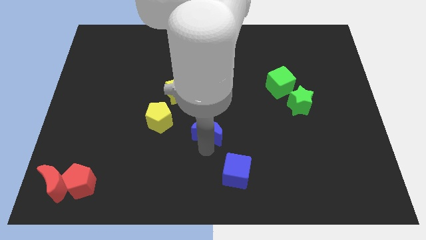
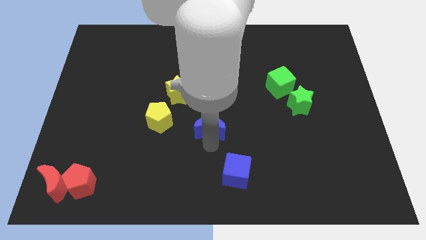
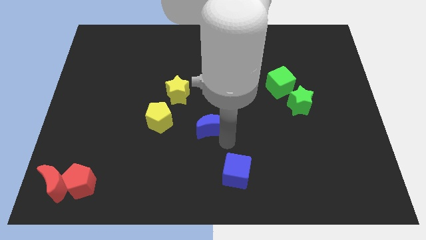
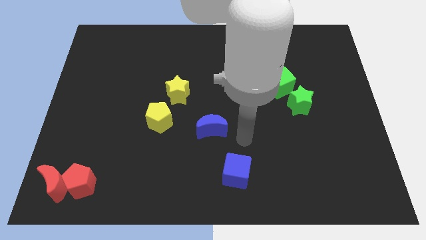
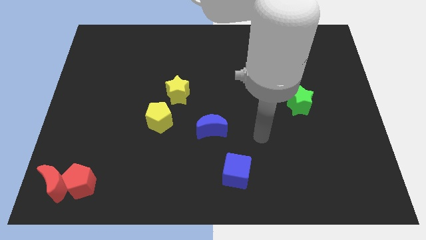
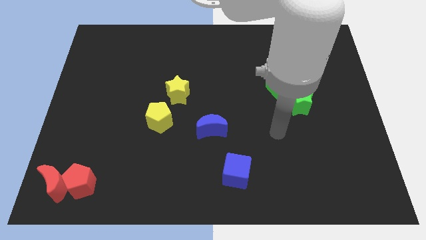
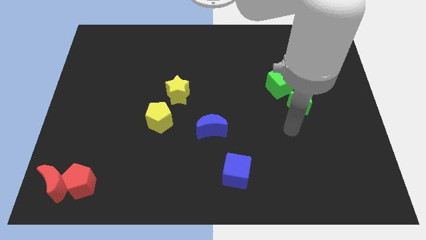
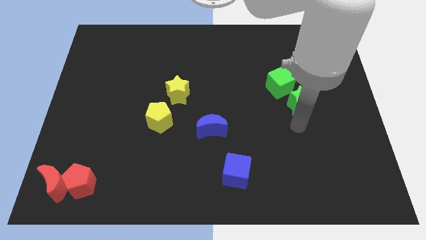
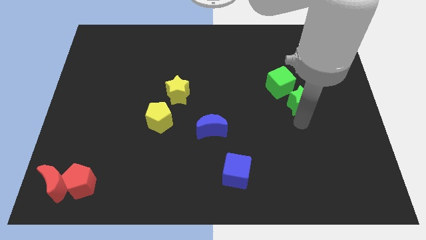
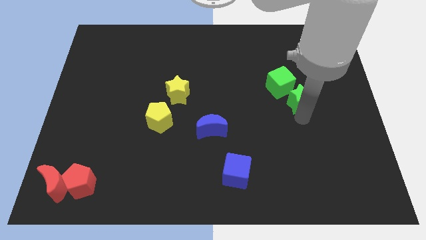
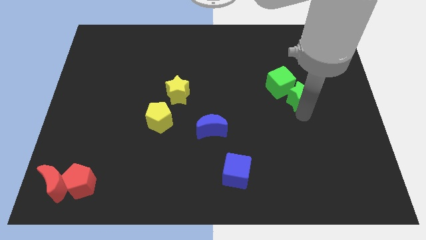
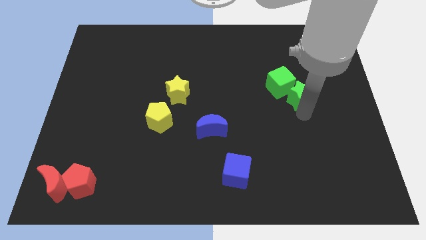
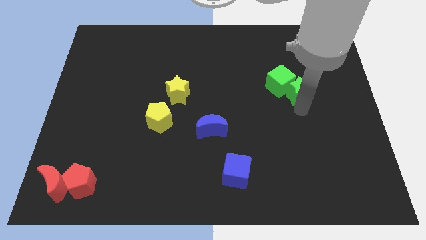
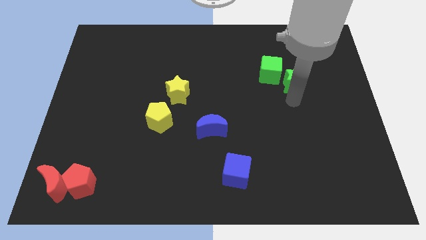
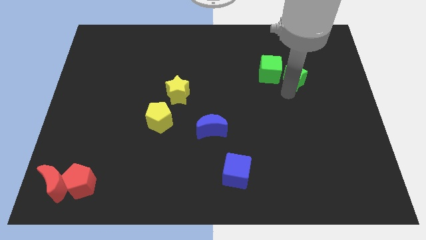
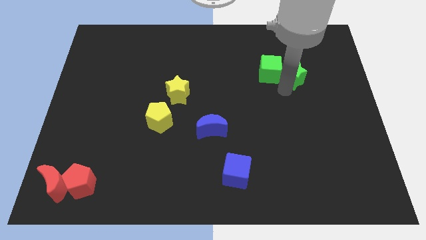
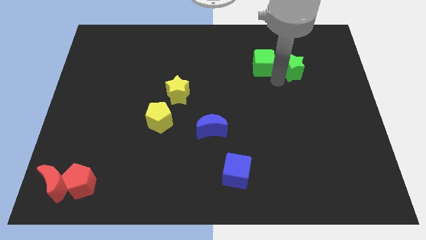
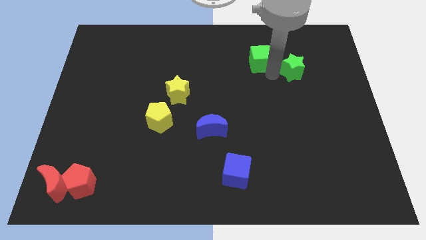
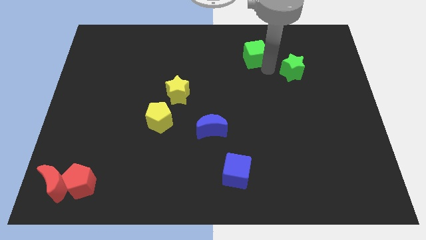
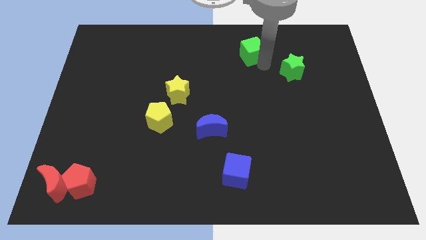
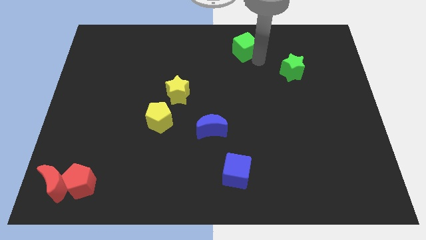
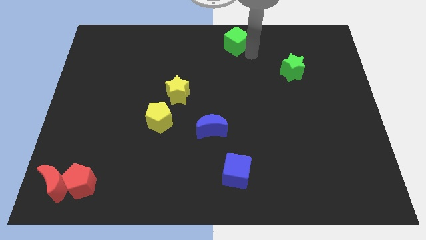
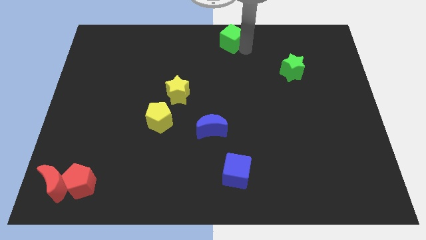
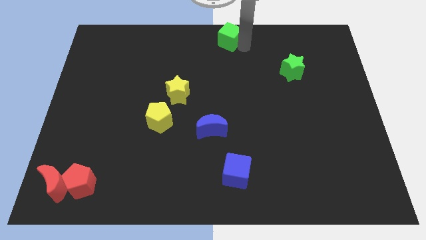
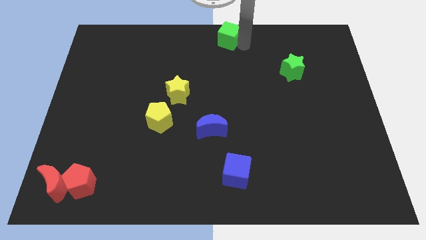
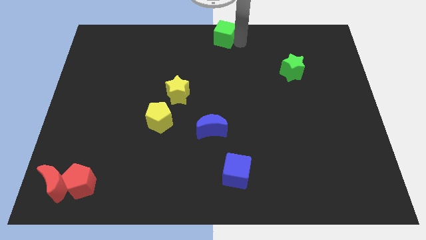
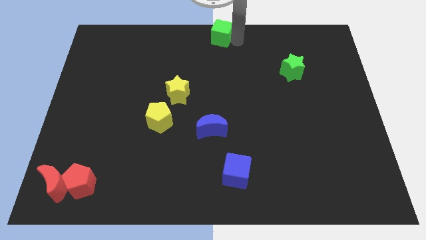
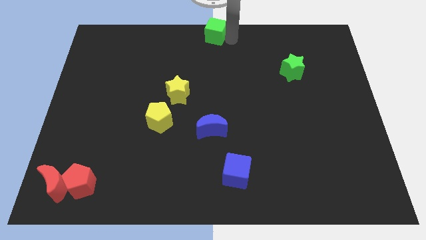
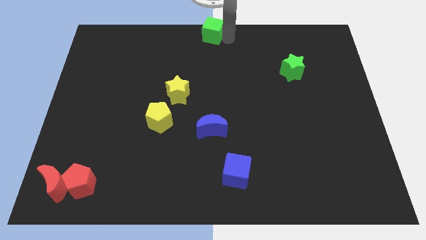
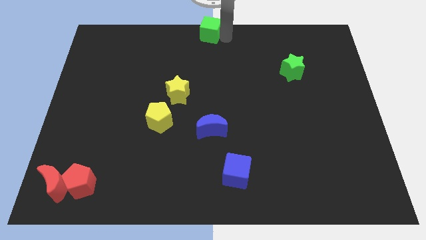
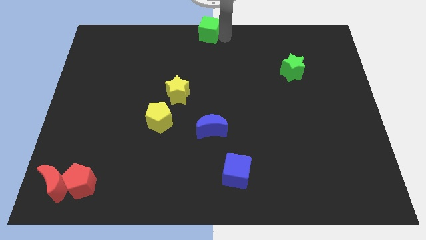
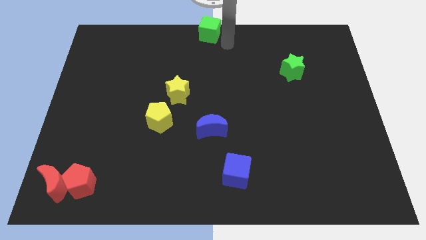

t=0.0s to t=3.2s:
place the green cube to the top center of the board

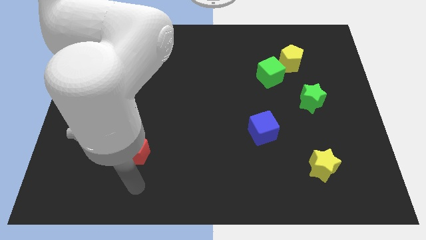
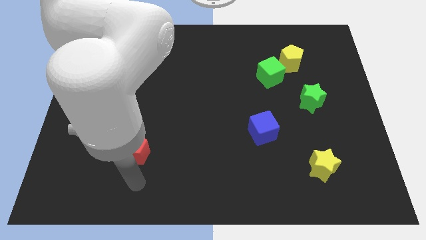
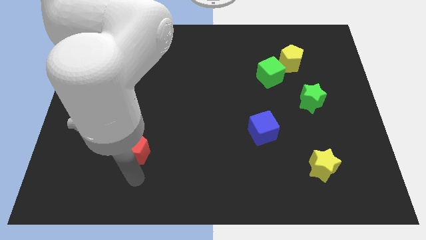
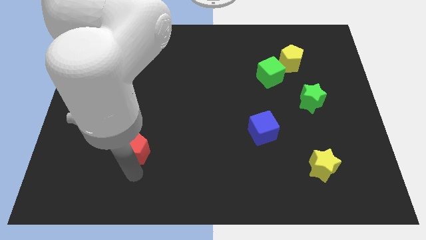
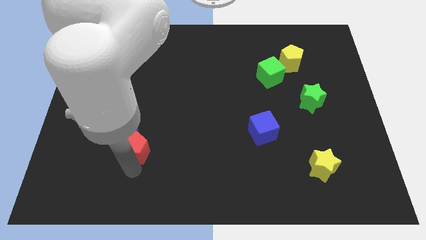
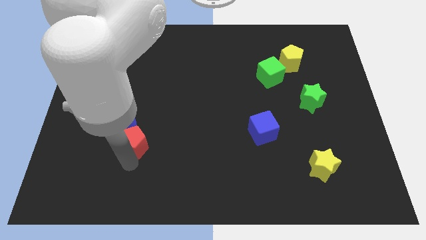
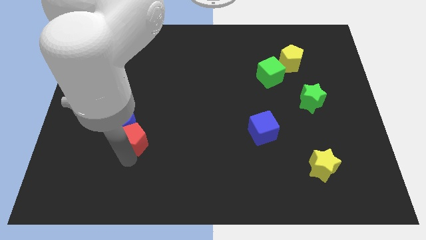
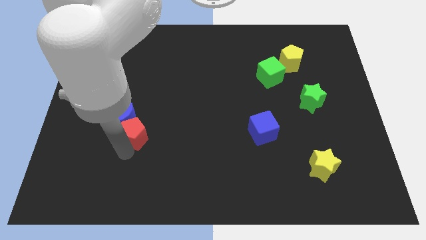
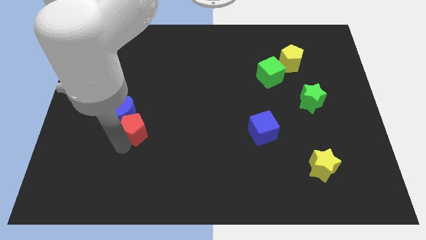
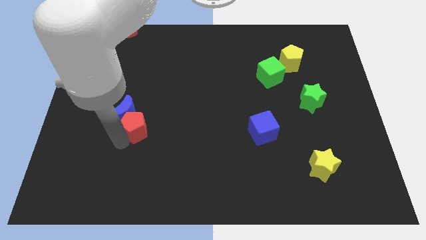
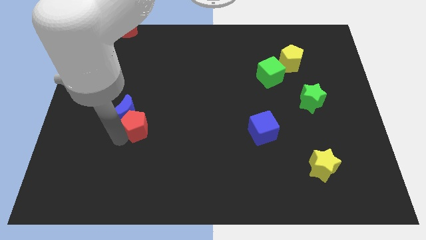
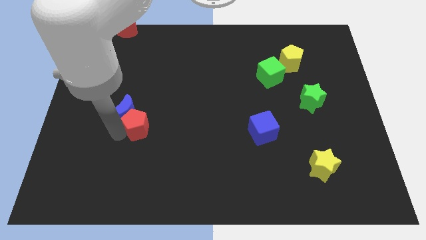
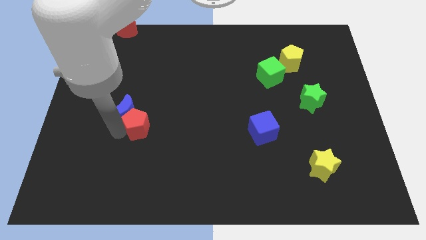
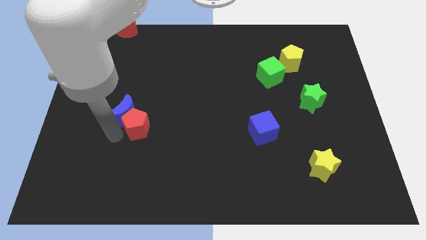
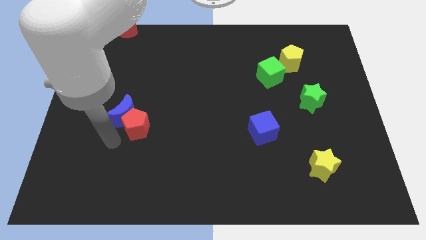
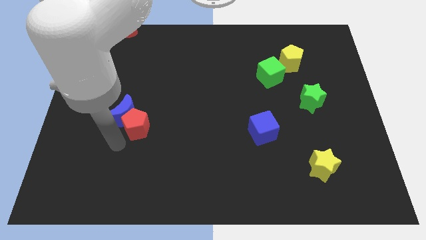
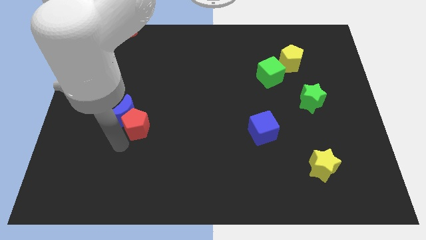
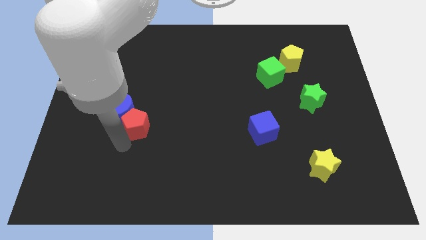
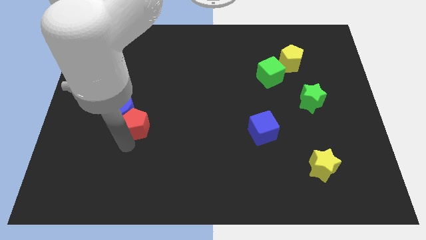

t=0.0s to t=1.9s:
place the red pentagon diagonal bottom right to blue moon

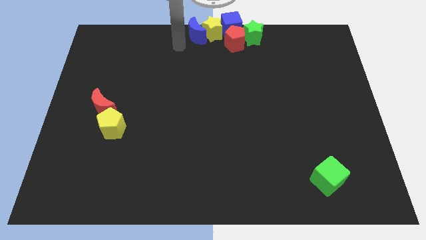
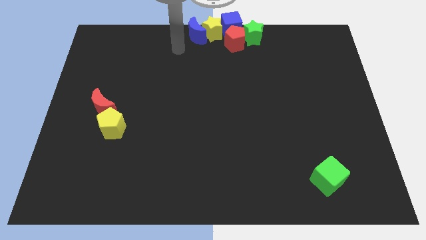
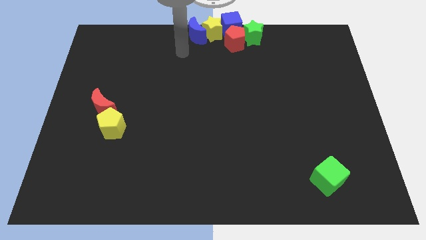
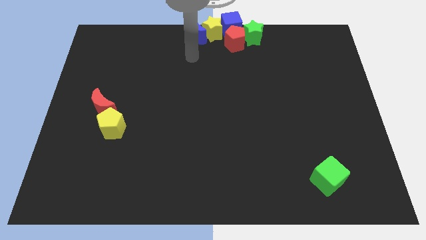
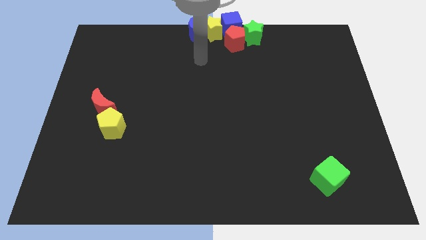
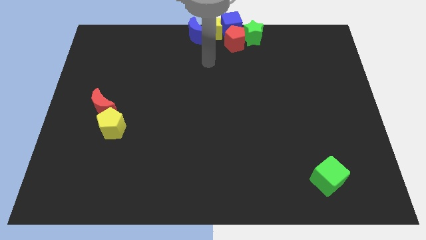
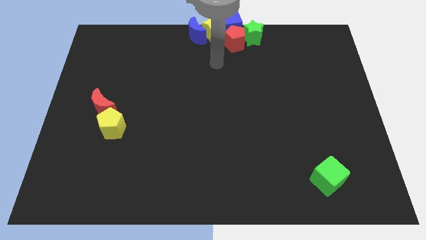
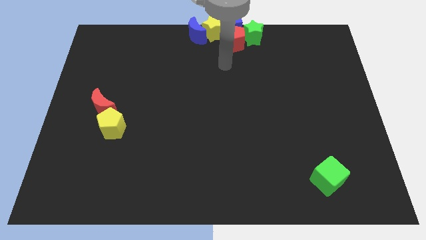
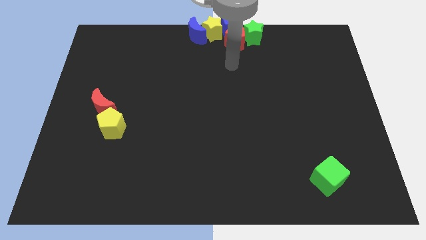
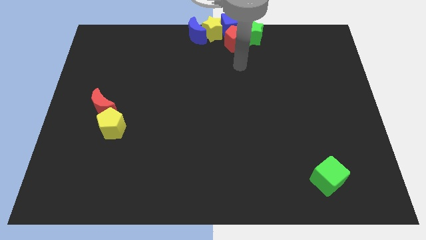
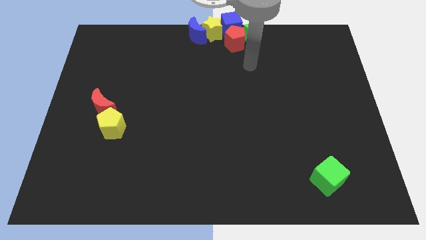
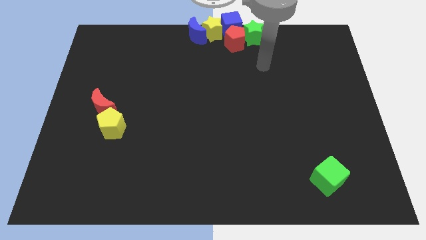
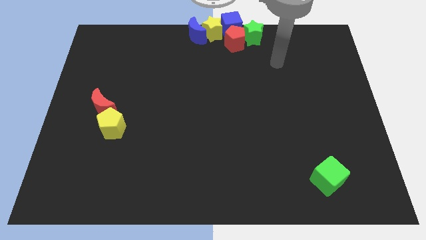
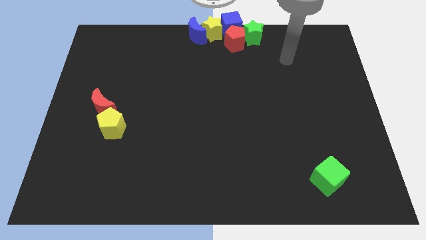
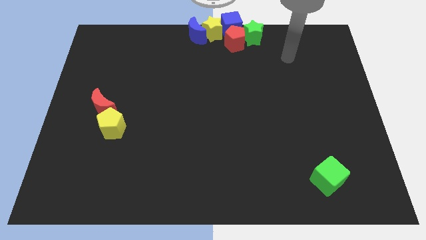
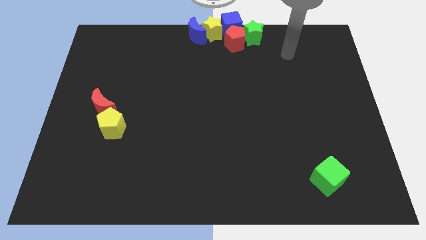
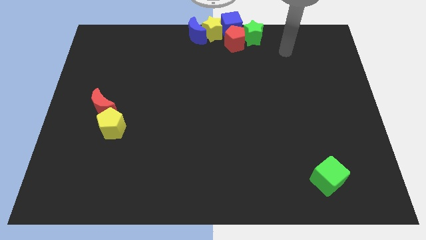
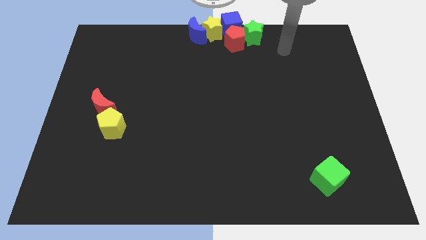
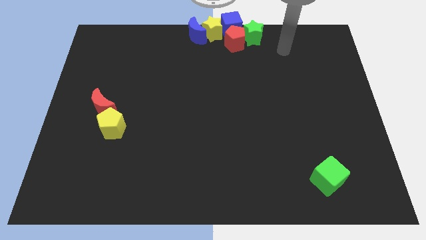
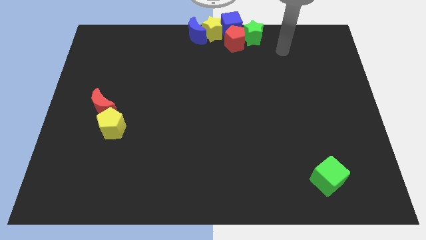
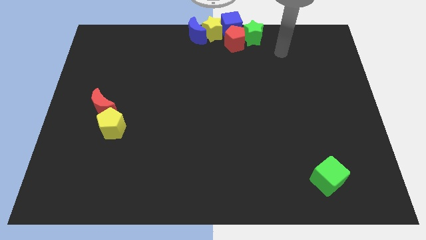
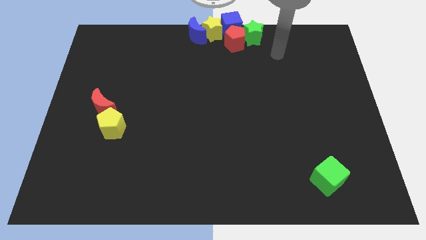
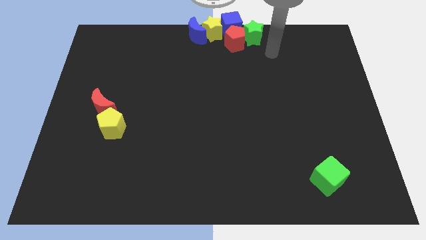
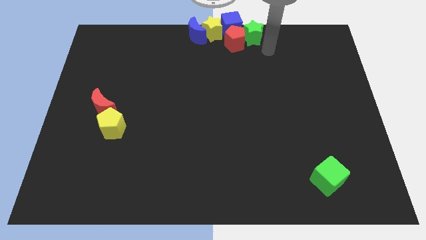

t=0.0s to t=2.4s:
move your arm below the green star

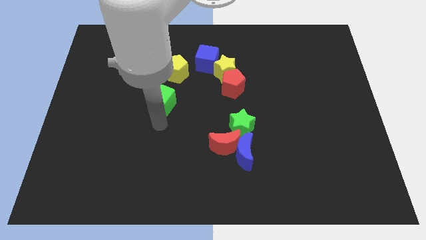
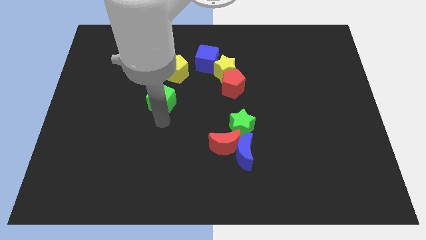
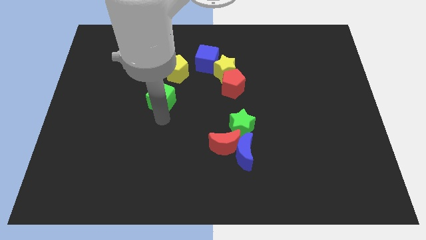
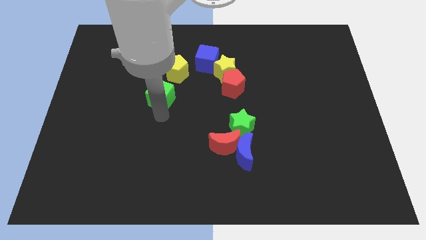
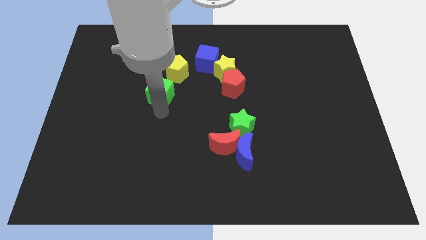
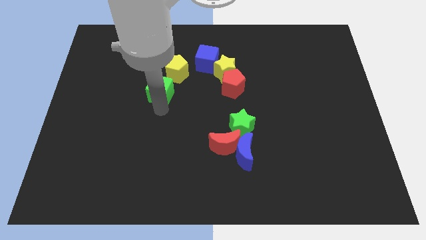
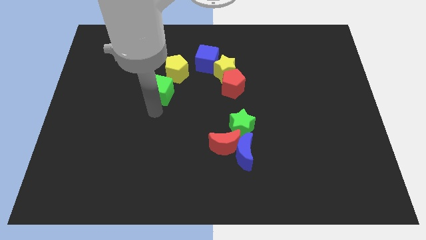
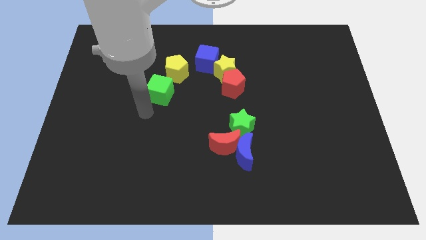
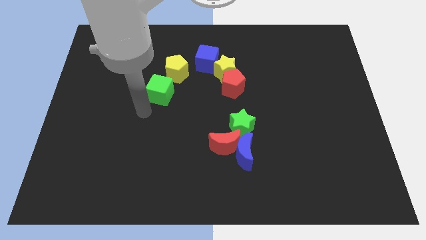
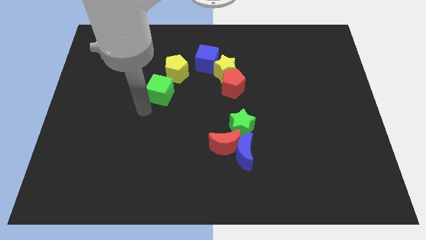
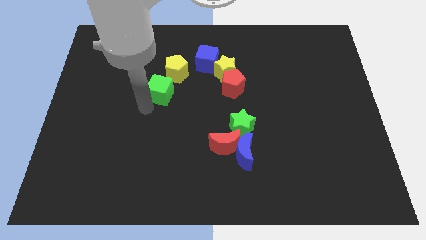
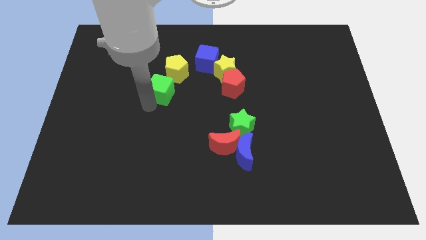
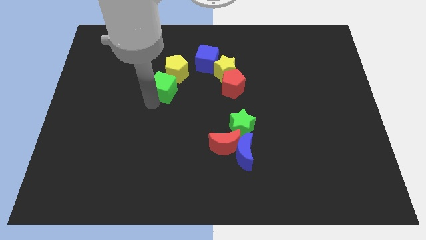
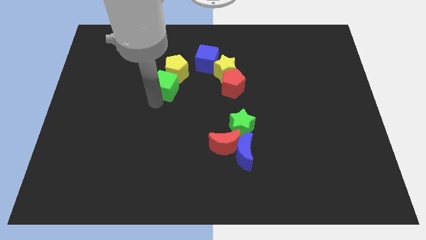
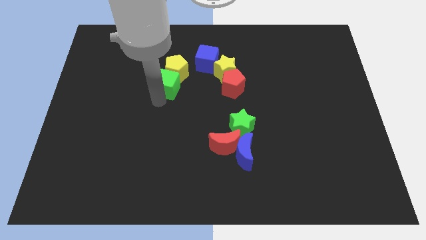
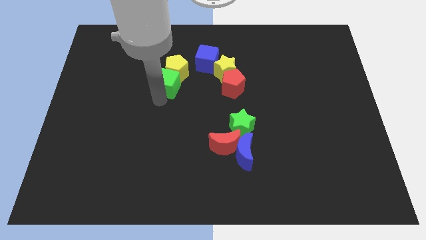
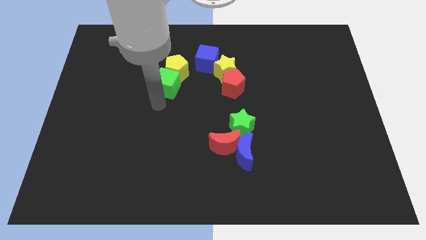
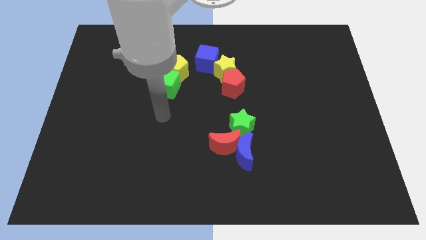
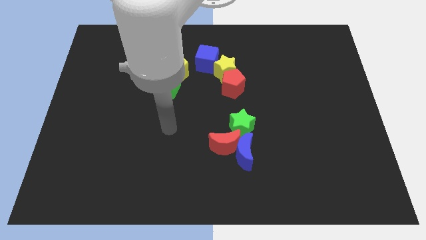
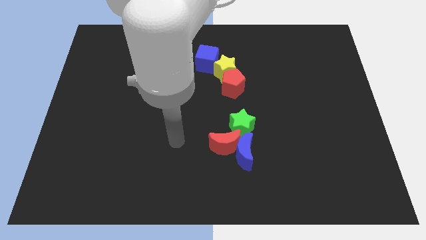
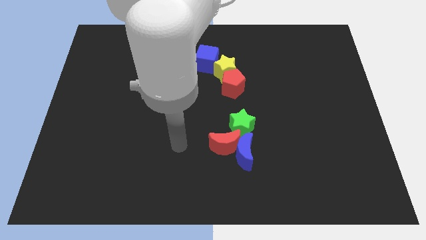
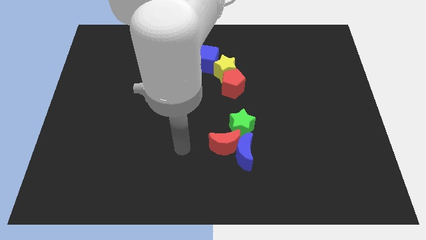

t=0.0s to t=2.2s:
move green cube into yellow pentagon
